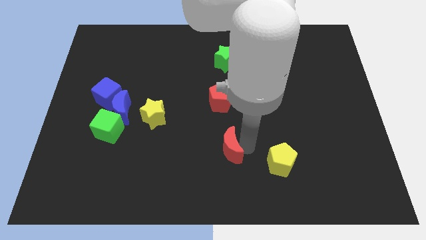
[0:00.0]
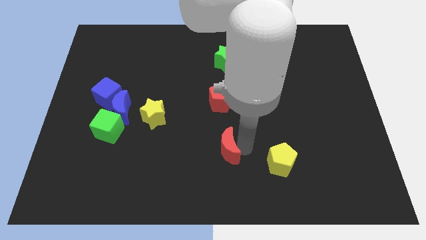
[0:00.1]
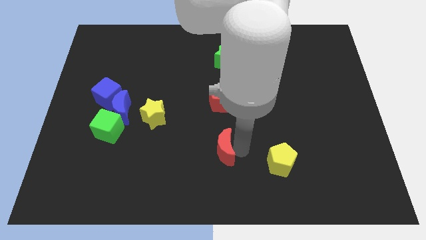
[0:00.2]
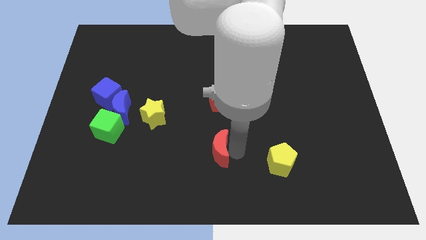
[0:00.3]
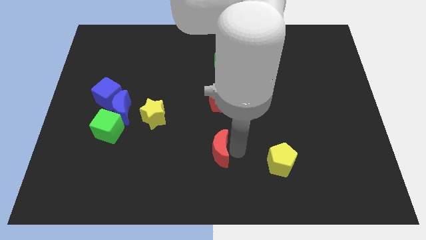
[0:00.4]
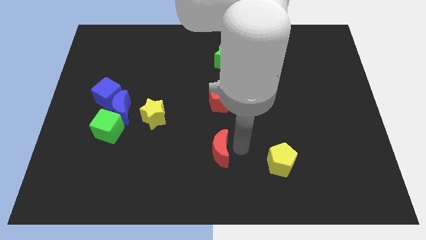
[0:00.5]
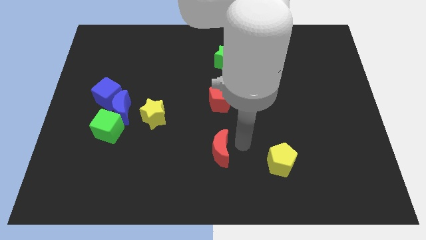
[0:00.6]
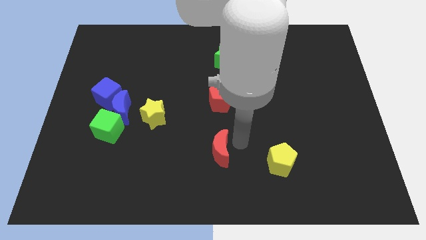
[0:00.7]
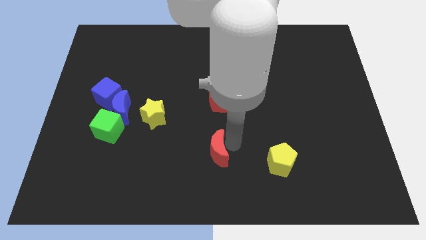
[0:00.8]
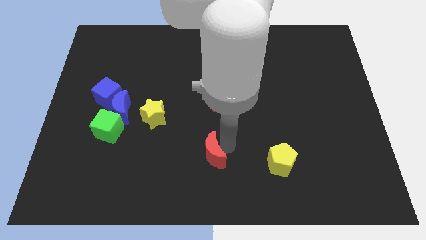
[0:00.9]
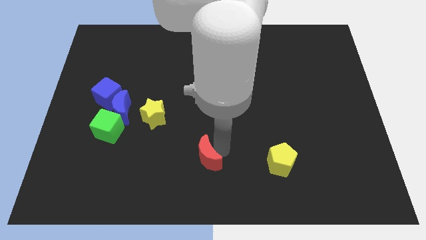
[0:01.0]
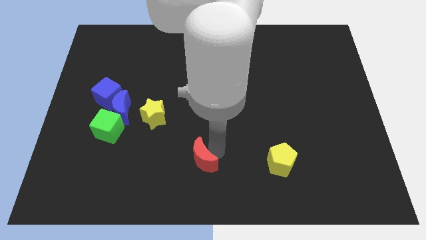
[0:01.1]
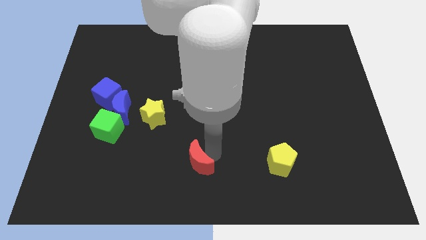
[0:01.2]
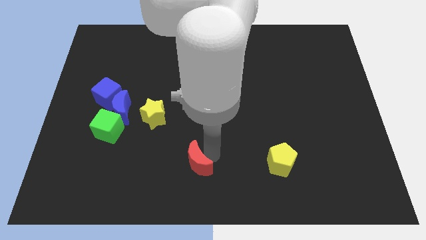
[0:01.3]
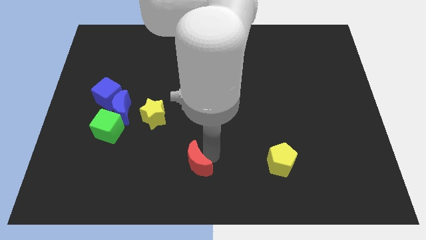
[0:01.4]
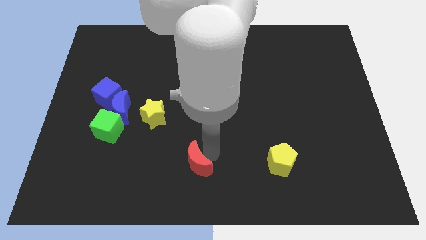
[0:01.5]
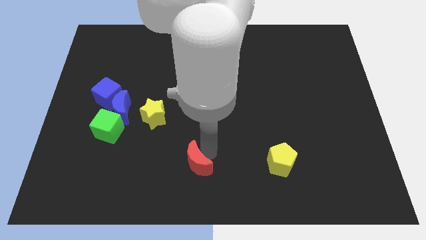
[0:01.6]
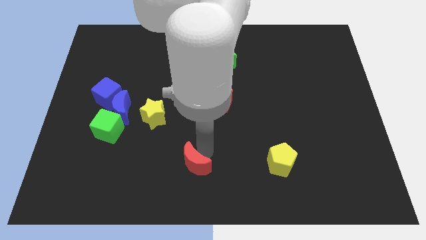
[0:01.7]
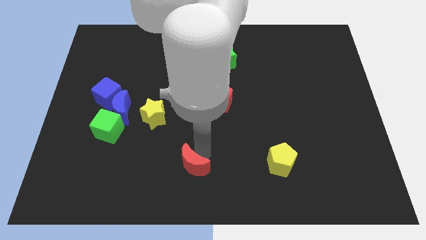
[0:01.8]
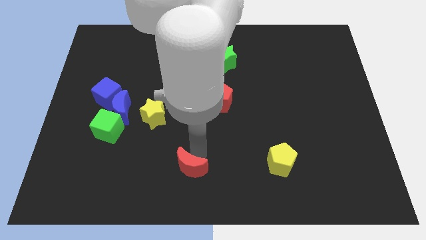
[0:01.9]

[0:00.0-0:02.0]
push the red crescent to the left of the board

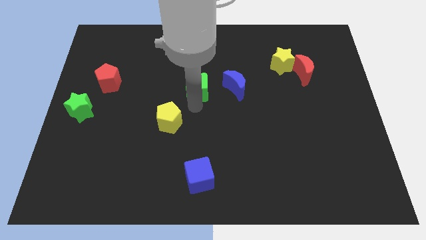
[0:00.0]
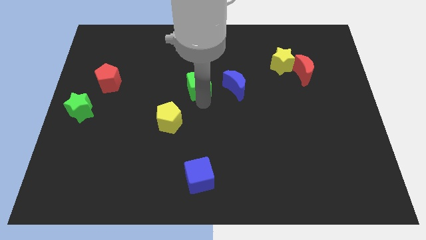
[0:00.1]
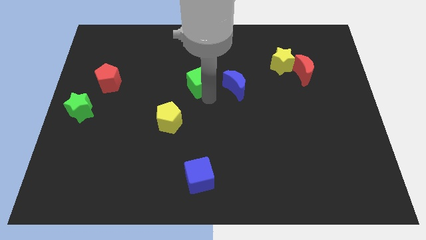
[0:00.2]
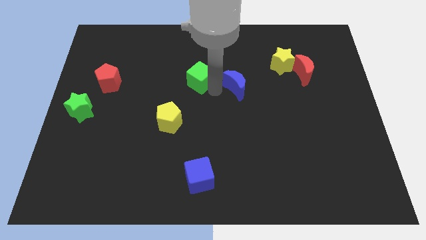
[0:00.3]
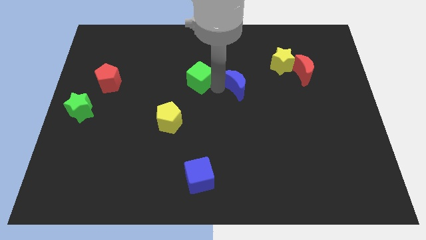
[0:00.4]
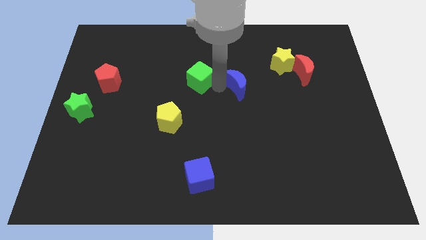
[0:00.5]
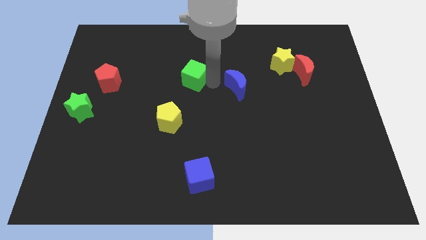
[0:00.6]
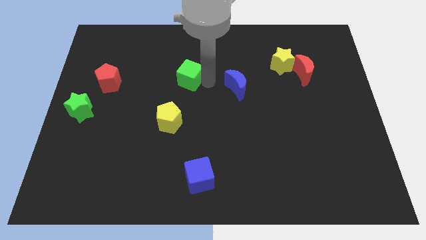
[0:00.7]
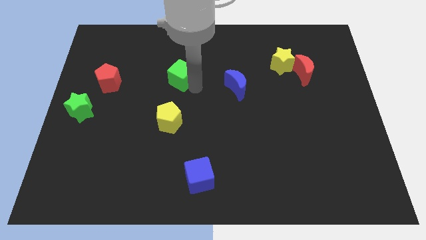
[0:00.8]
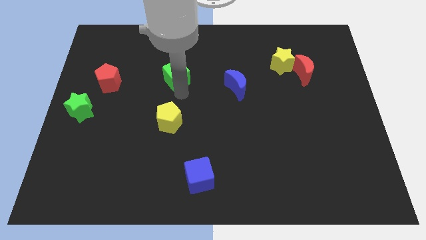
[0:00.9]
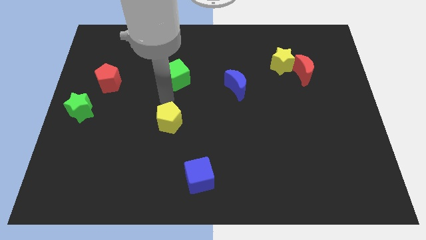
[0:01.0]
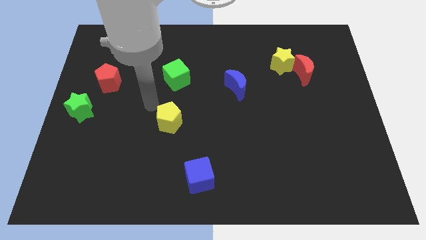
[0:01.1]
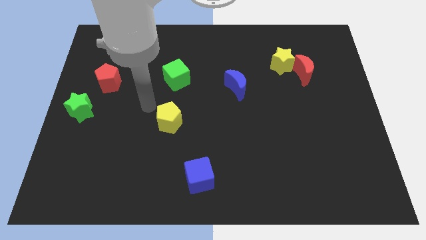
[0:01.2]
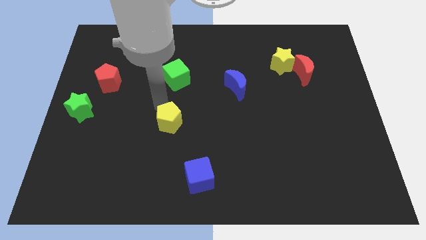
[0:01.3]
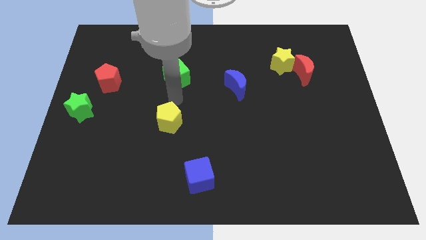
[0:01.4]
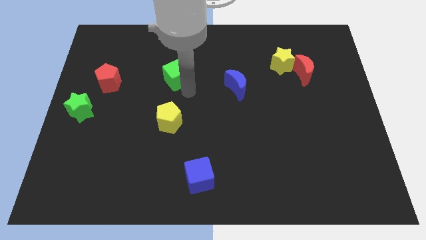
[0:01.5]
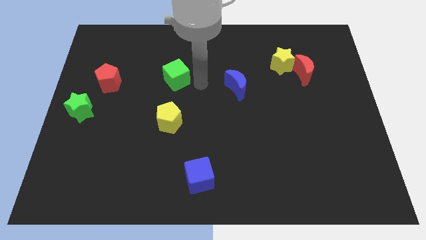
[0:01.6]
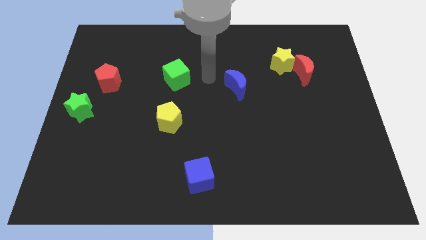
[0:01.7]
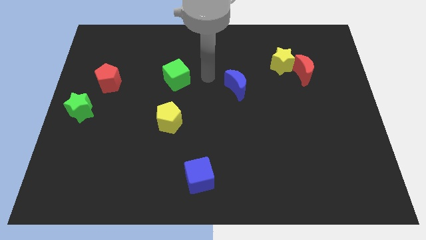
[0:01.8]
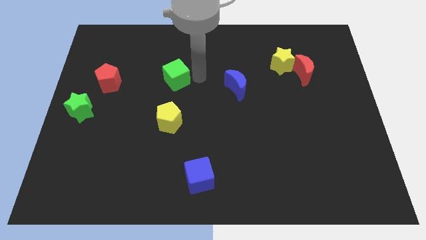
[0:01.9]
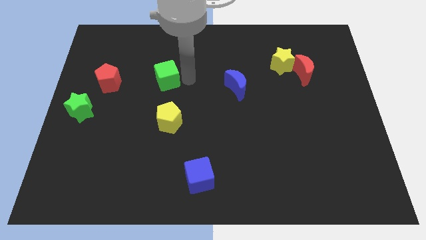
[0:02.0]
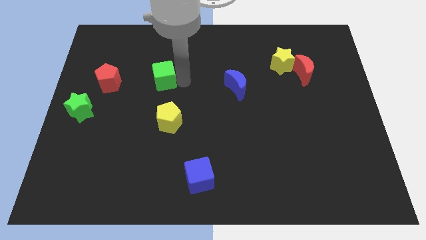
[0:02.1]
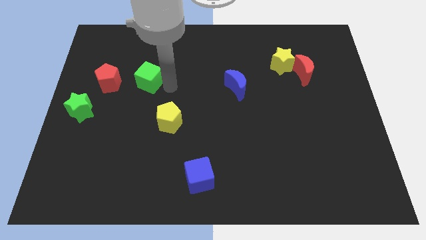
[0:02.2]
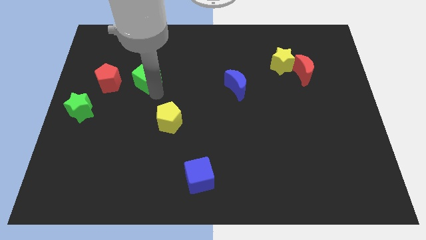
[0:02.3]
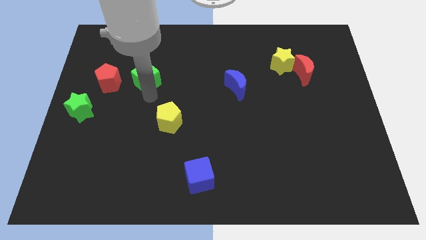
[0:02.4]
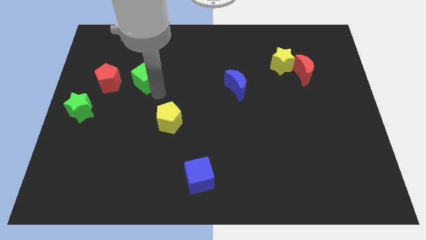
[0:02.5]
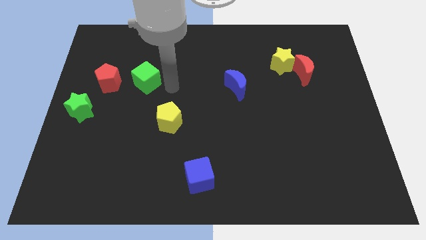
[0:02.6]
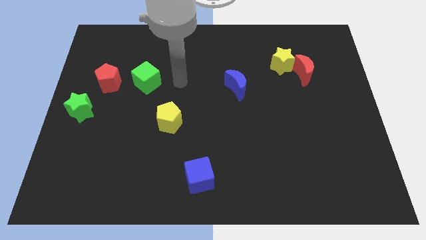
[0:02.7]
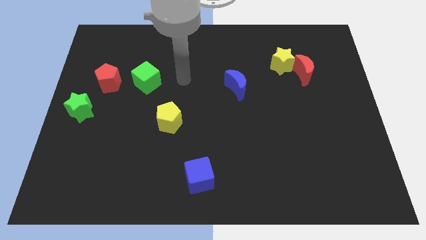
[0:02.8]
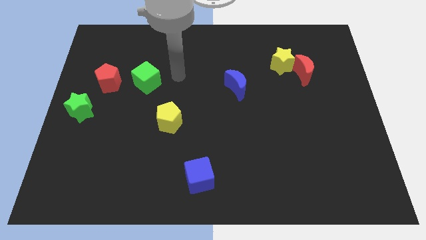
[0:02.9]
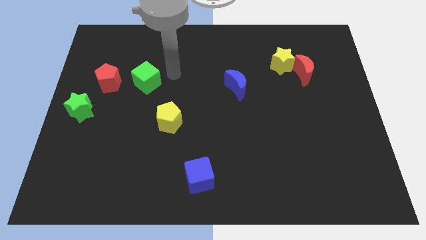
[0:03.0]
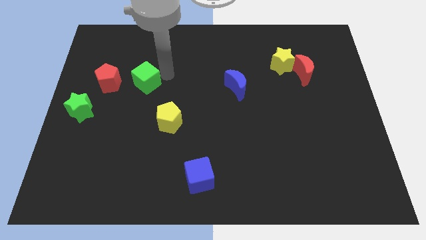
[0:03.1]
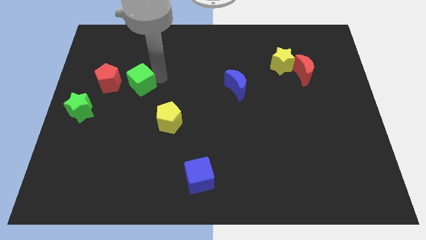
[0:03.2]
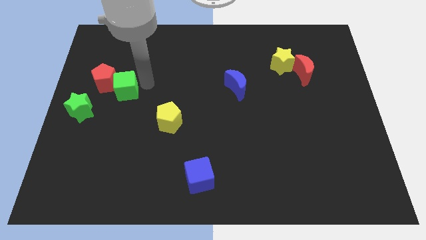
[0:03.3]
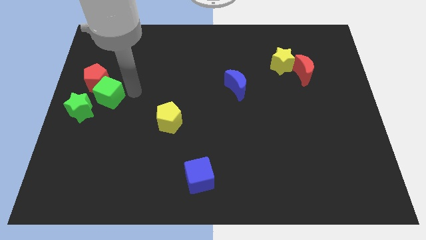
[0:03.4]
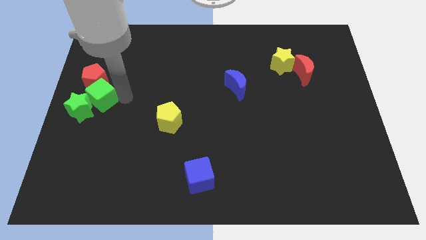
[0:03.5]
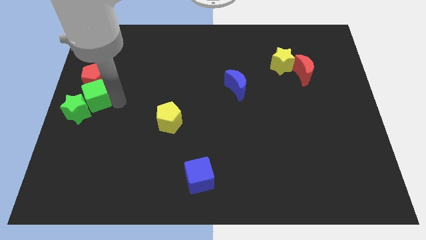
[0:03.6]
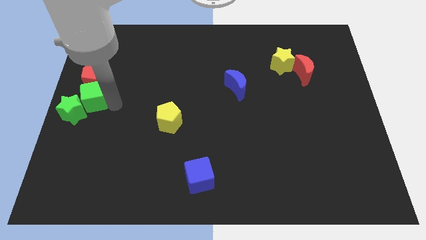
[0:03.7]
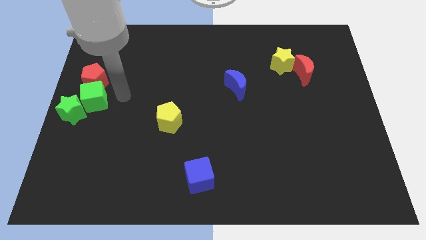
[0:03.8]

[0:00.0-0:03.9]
push the green cube into the green star and red pentagon

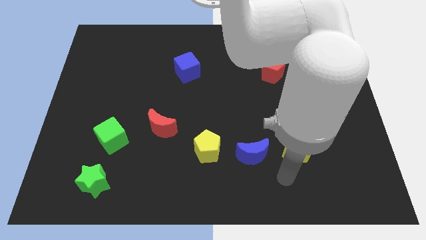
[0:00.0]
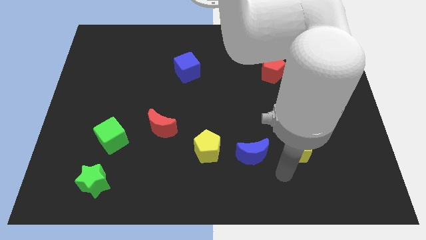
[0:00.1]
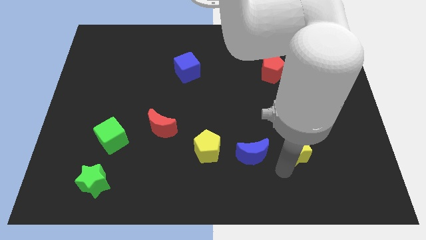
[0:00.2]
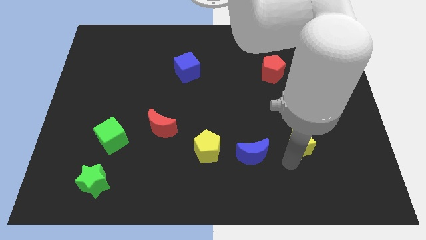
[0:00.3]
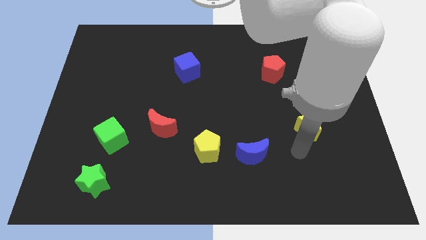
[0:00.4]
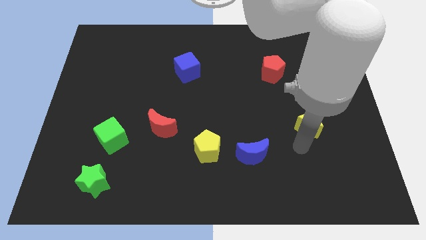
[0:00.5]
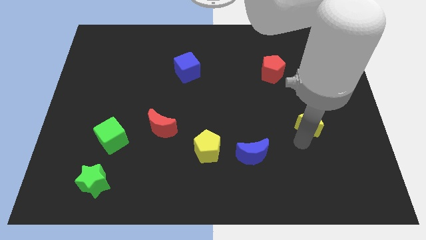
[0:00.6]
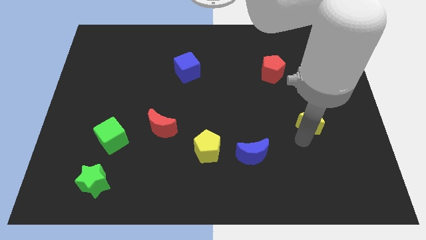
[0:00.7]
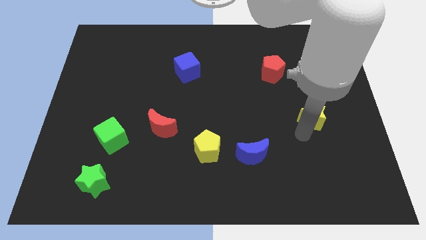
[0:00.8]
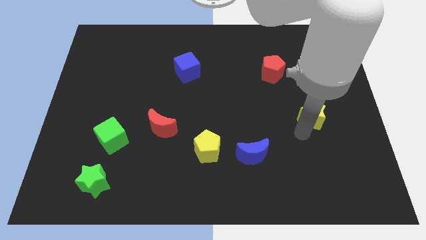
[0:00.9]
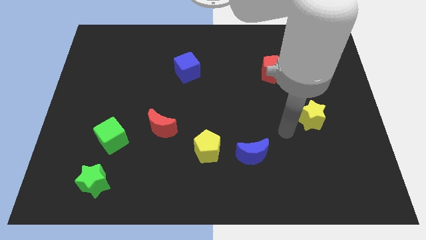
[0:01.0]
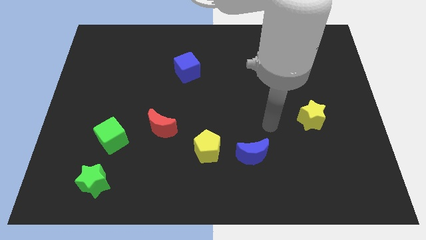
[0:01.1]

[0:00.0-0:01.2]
move yellow star slightly up

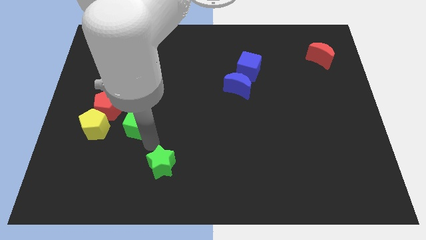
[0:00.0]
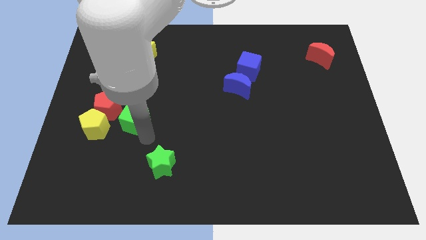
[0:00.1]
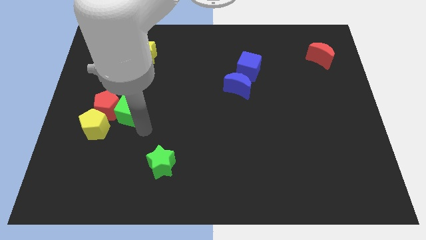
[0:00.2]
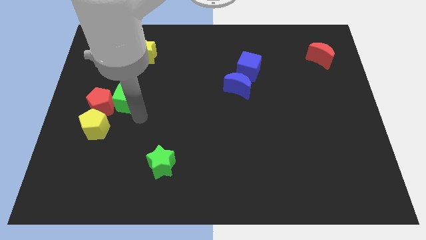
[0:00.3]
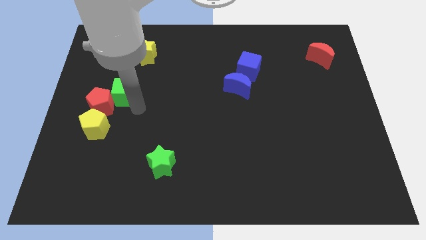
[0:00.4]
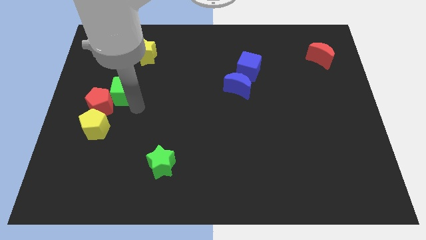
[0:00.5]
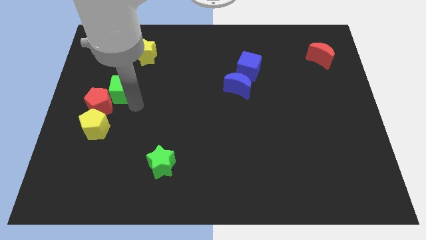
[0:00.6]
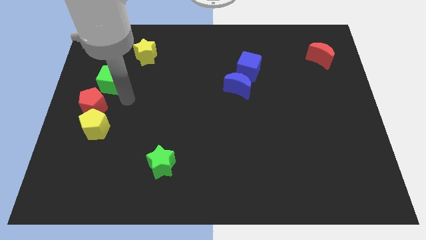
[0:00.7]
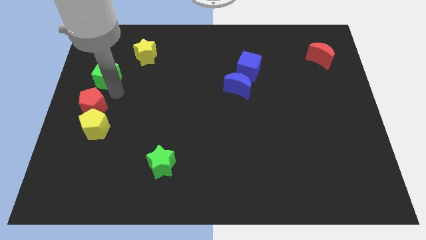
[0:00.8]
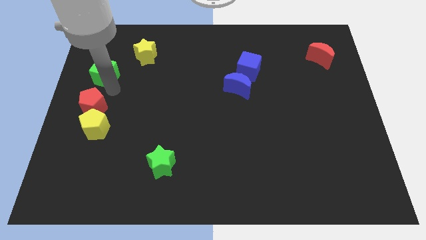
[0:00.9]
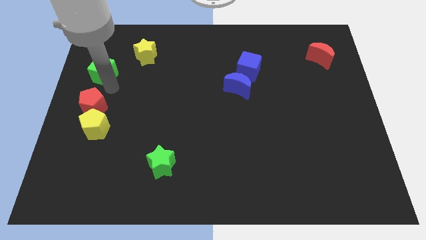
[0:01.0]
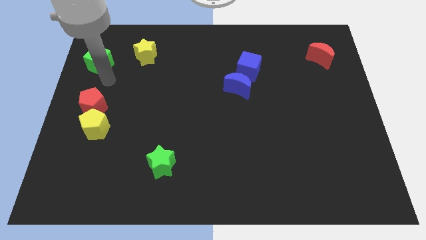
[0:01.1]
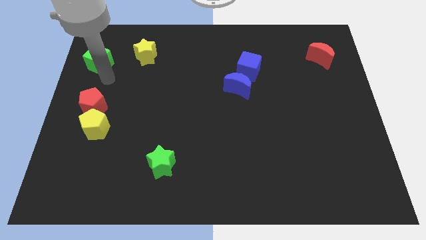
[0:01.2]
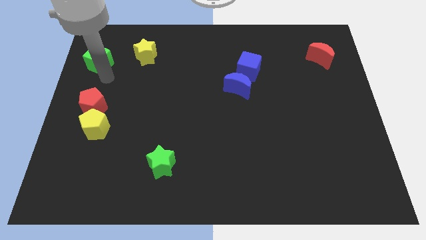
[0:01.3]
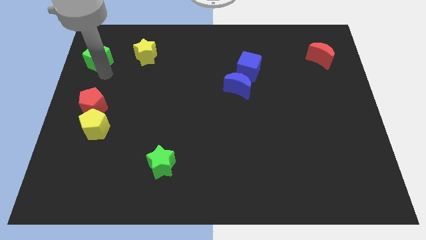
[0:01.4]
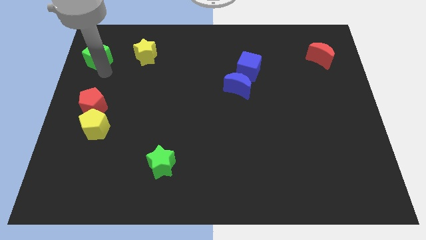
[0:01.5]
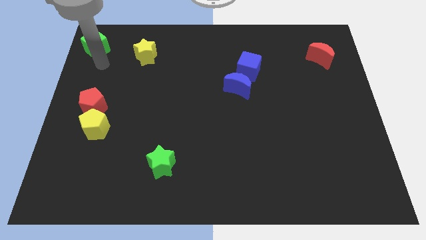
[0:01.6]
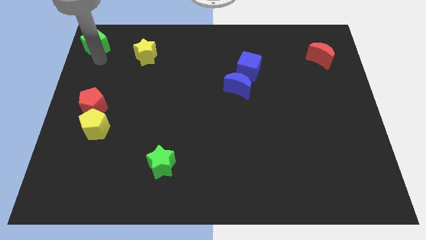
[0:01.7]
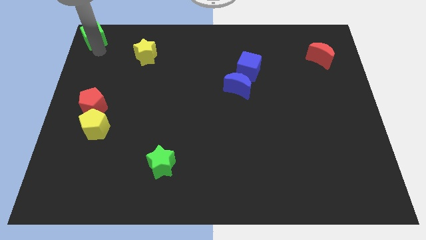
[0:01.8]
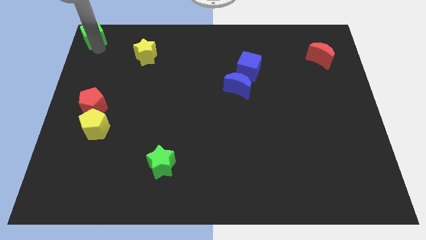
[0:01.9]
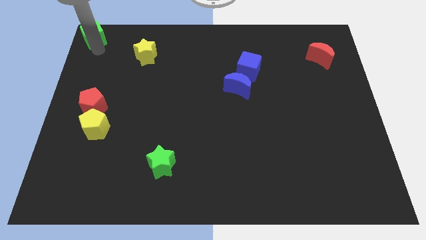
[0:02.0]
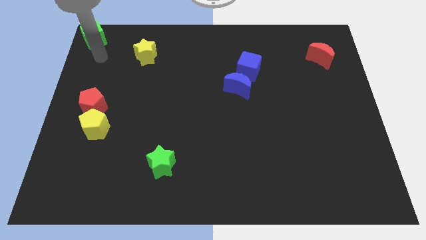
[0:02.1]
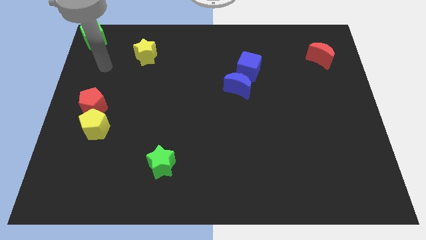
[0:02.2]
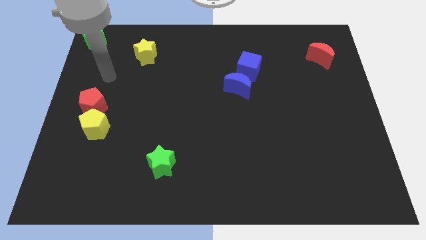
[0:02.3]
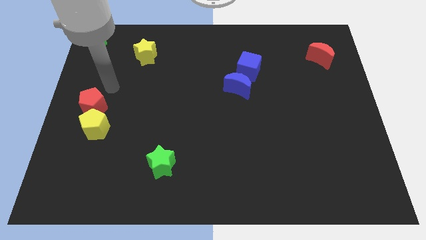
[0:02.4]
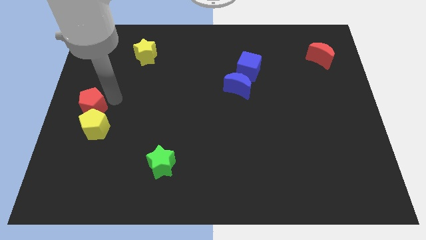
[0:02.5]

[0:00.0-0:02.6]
move the green cube to the top left corner of the board
